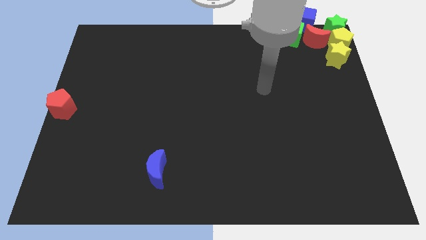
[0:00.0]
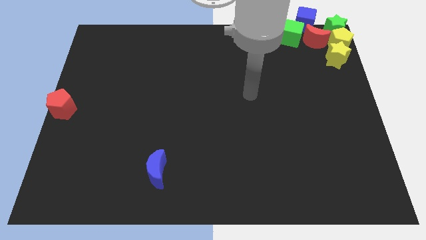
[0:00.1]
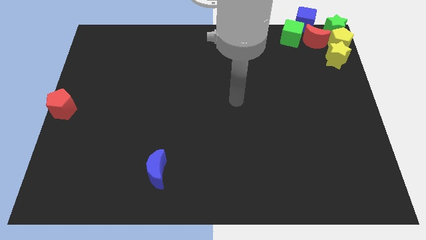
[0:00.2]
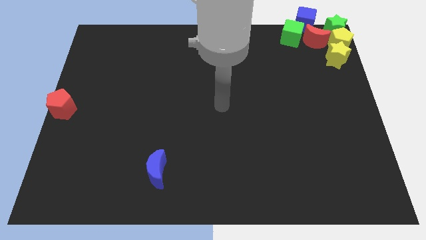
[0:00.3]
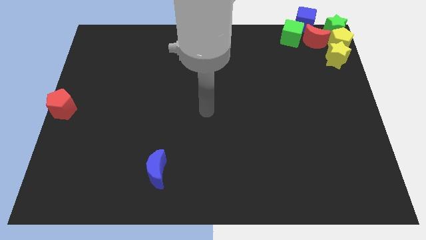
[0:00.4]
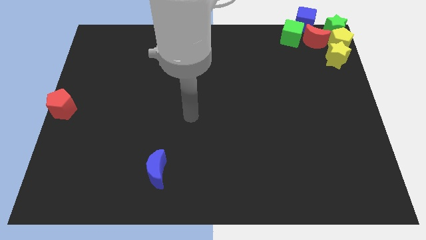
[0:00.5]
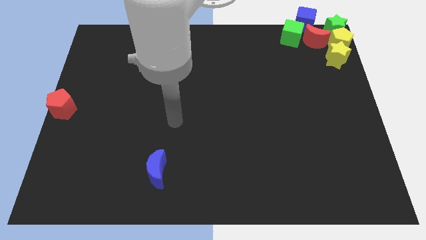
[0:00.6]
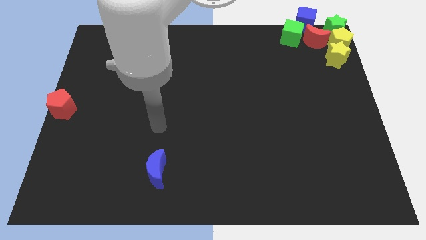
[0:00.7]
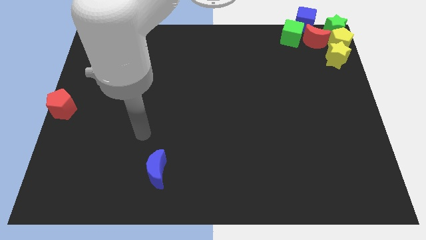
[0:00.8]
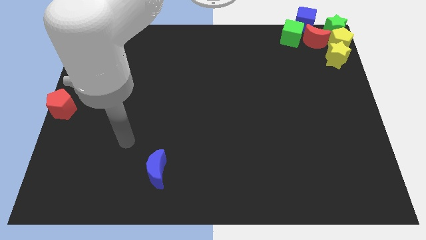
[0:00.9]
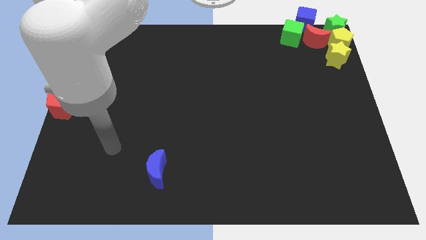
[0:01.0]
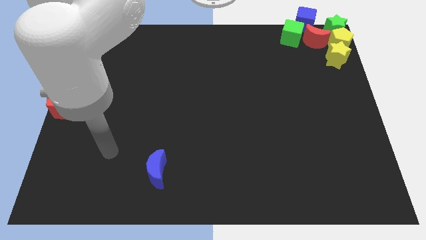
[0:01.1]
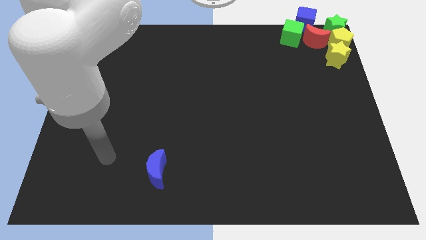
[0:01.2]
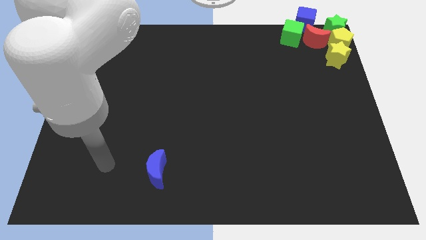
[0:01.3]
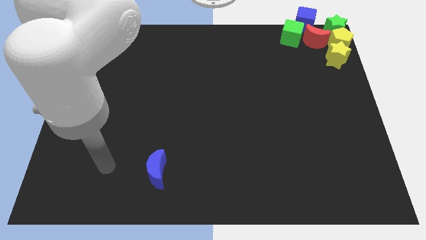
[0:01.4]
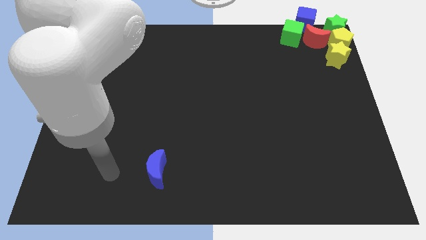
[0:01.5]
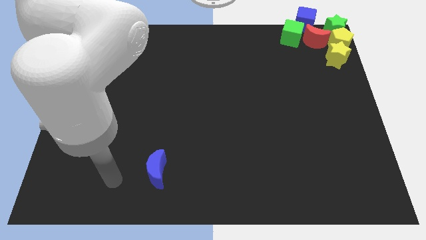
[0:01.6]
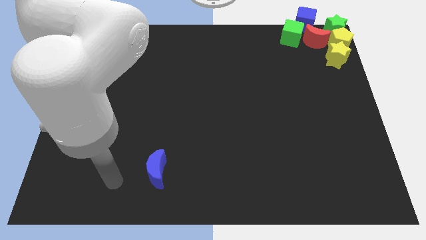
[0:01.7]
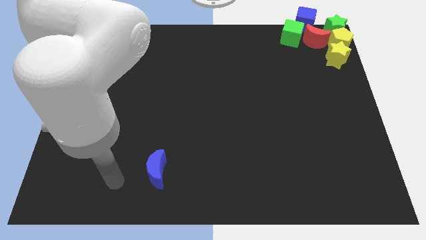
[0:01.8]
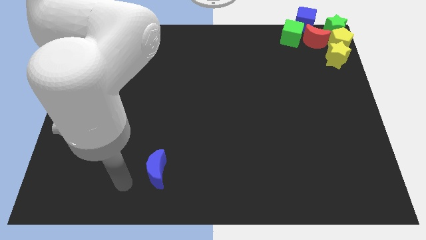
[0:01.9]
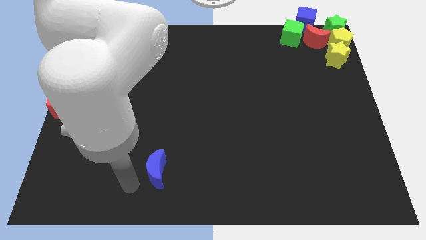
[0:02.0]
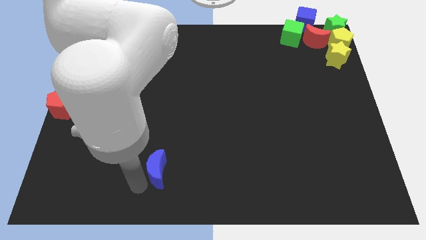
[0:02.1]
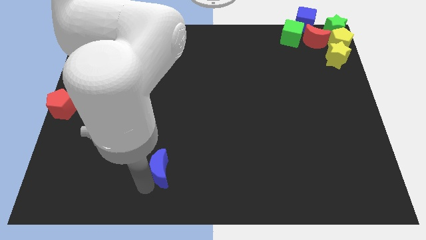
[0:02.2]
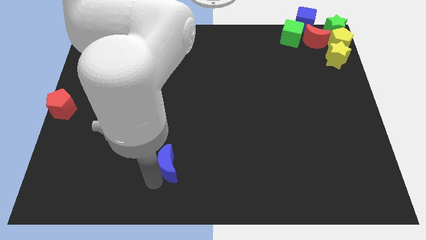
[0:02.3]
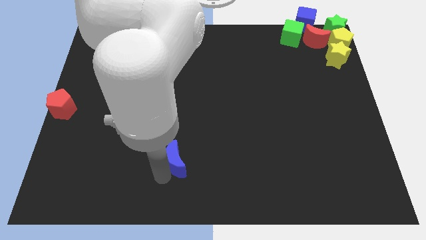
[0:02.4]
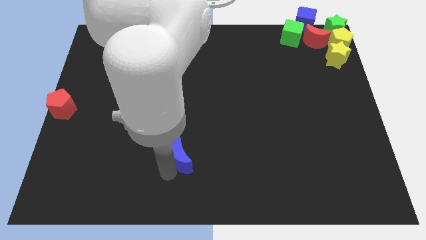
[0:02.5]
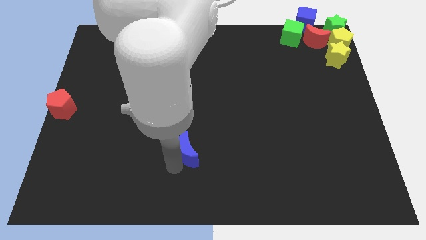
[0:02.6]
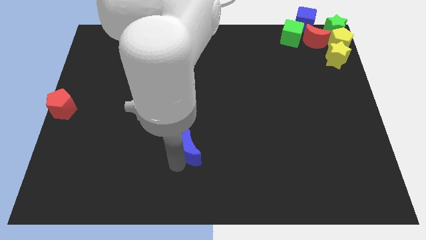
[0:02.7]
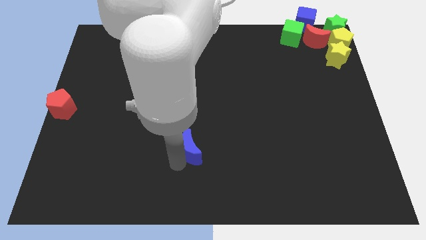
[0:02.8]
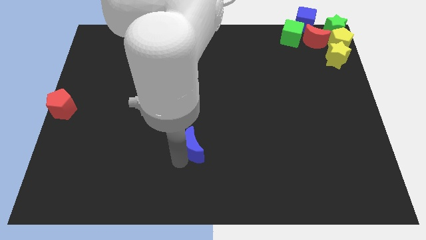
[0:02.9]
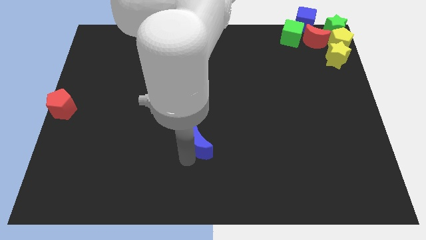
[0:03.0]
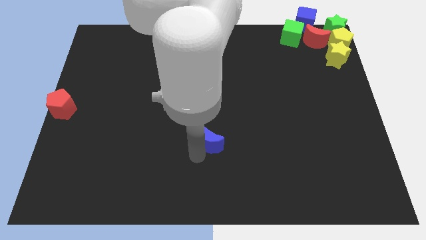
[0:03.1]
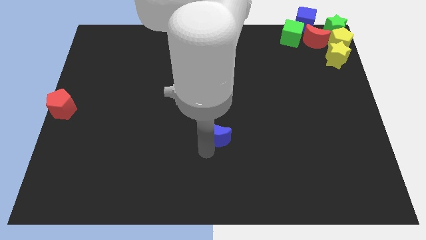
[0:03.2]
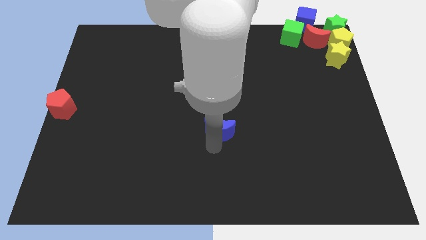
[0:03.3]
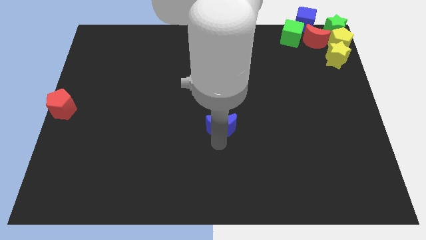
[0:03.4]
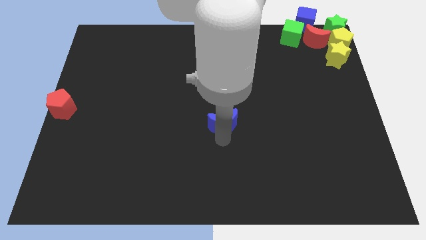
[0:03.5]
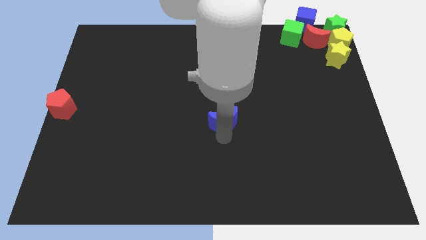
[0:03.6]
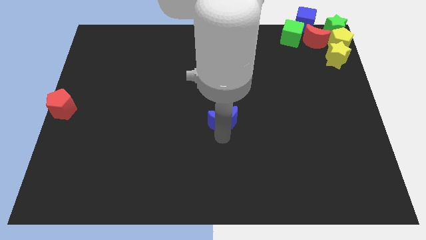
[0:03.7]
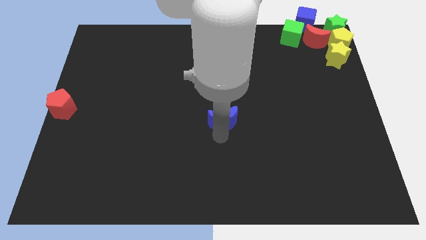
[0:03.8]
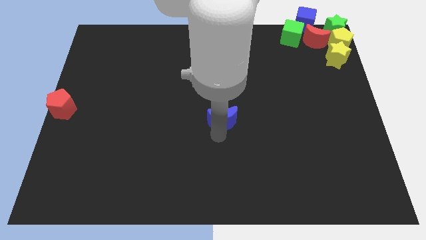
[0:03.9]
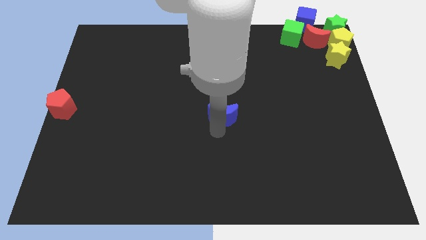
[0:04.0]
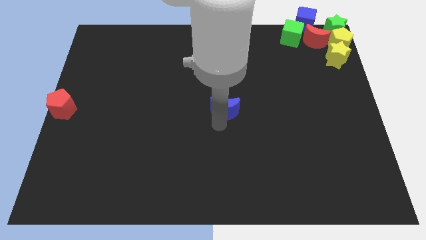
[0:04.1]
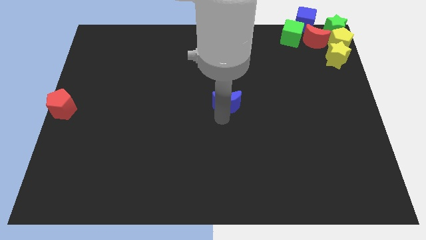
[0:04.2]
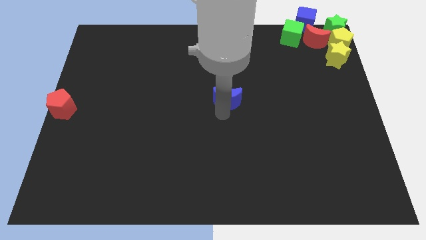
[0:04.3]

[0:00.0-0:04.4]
move the blue moon to the center of the board

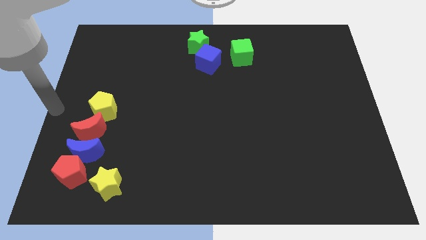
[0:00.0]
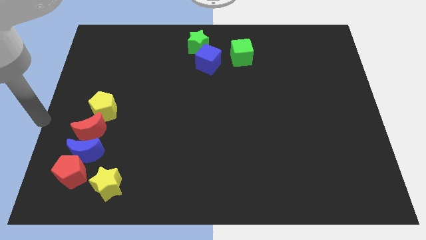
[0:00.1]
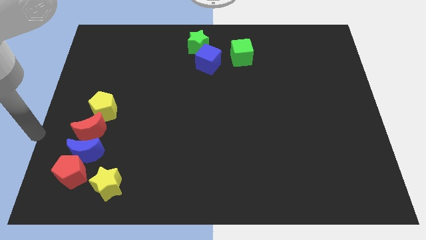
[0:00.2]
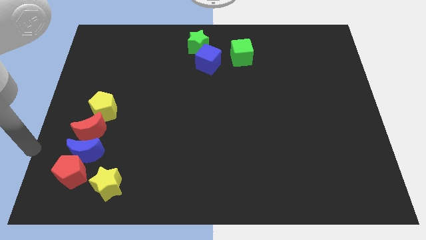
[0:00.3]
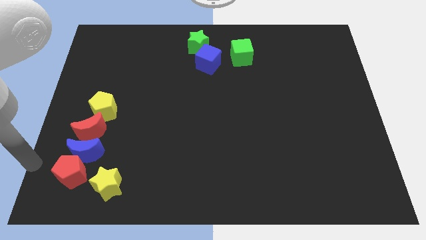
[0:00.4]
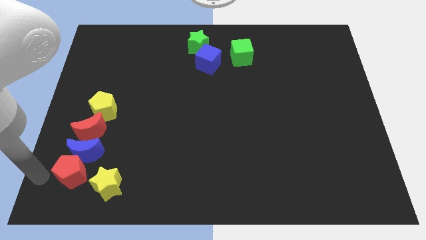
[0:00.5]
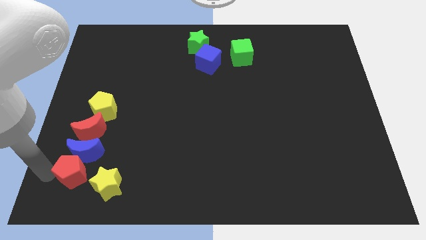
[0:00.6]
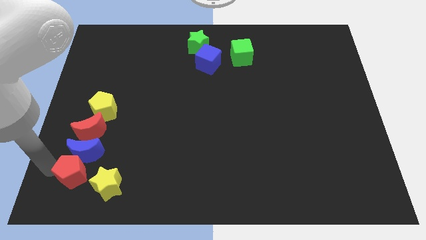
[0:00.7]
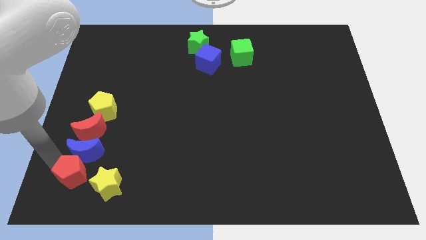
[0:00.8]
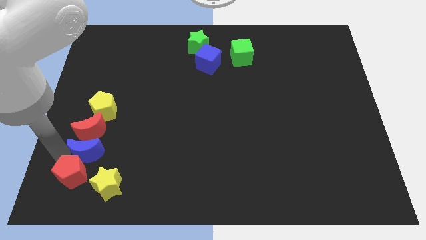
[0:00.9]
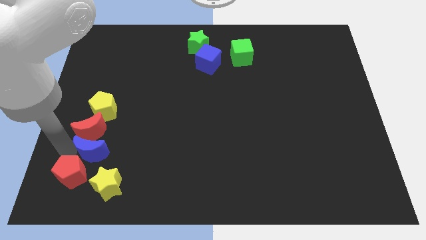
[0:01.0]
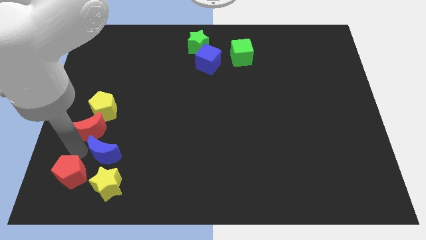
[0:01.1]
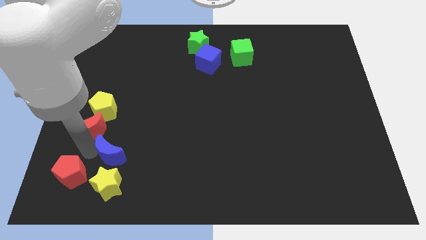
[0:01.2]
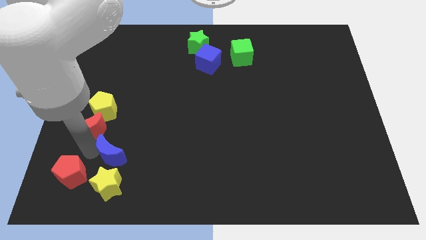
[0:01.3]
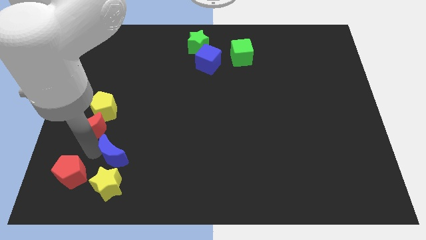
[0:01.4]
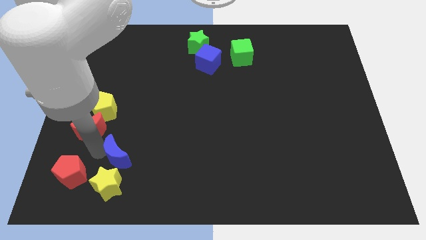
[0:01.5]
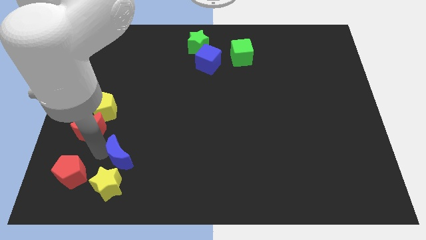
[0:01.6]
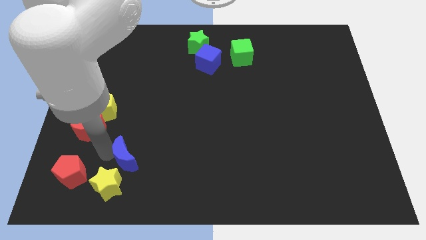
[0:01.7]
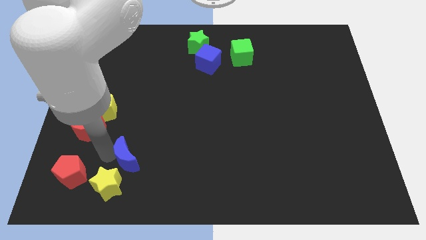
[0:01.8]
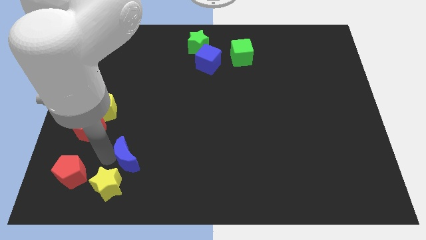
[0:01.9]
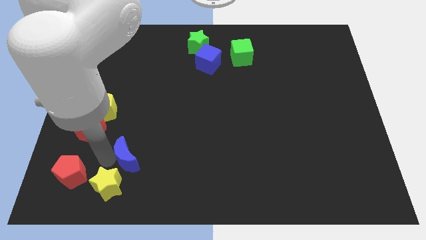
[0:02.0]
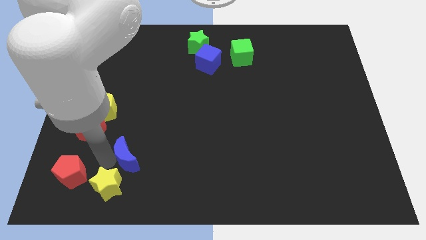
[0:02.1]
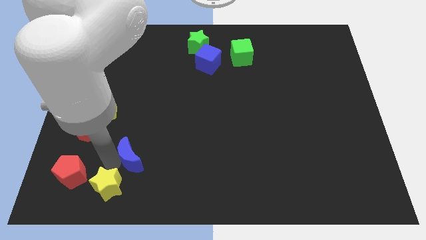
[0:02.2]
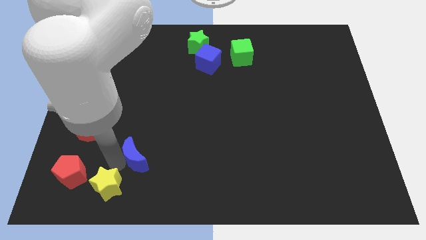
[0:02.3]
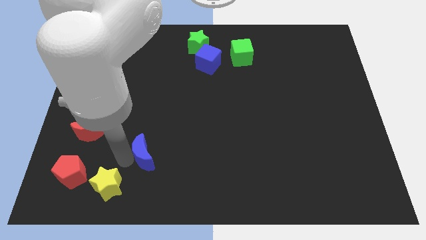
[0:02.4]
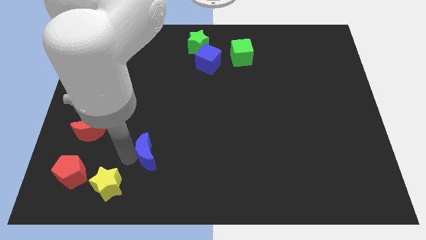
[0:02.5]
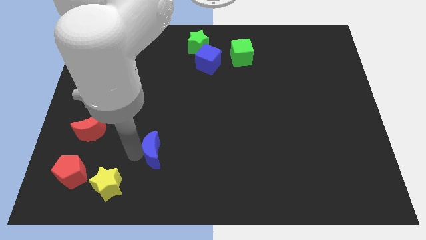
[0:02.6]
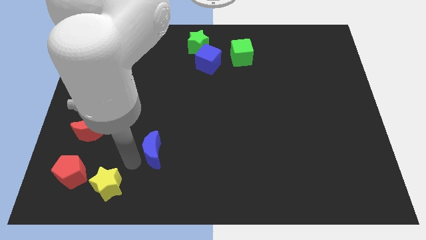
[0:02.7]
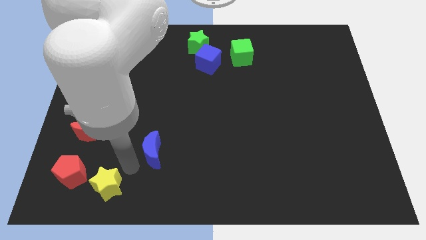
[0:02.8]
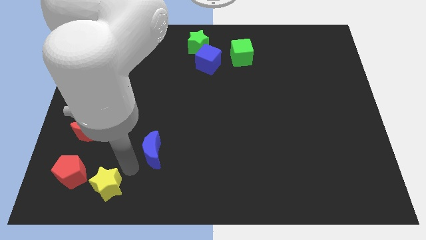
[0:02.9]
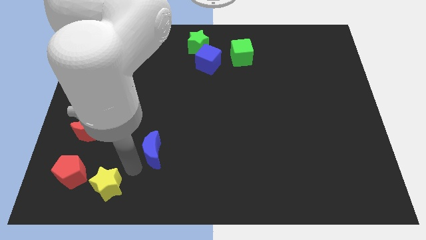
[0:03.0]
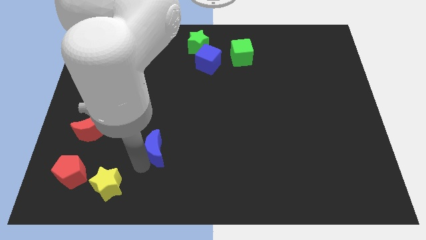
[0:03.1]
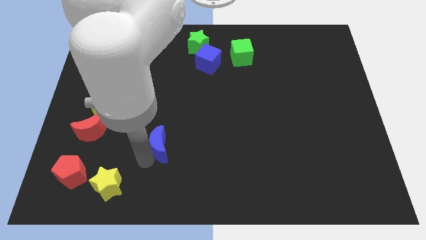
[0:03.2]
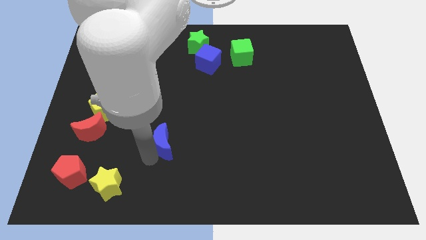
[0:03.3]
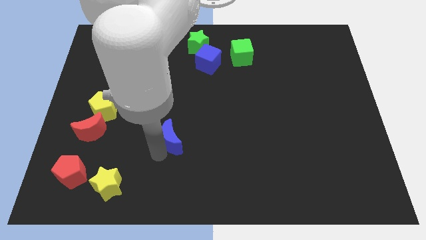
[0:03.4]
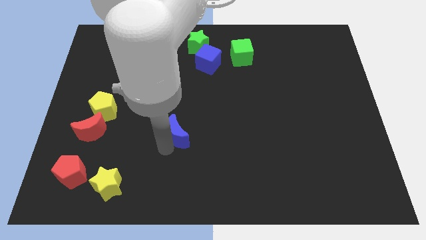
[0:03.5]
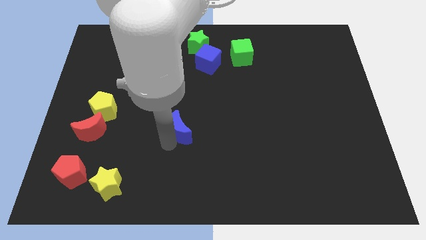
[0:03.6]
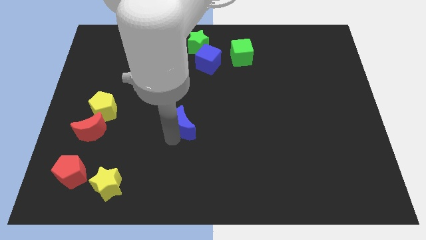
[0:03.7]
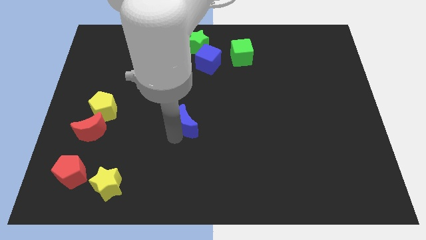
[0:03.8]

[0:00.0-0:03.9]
push the blue moon towards the center of the board

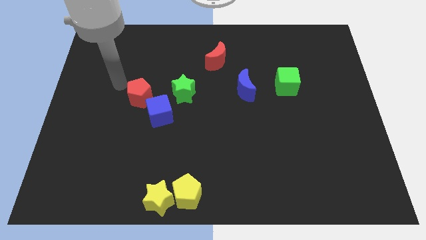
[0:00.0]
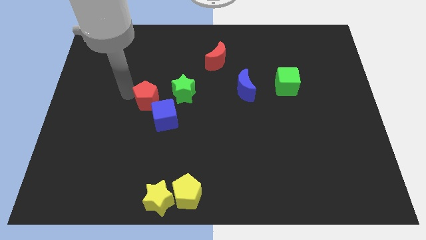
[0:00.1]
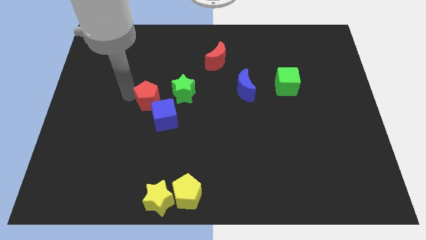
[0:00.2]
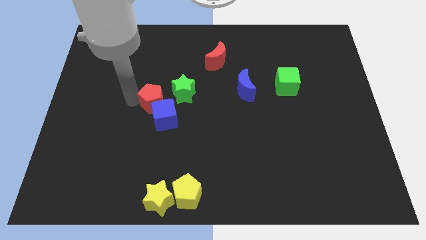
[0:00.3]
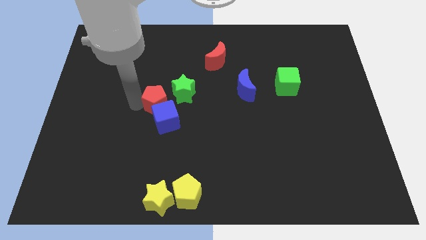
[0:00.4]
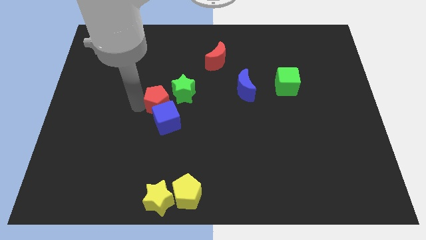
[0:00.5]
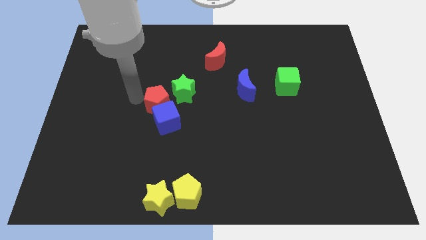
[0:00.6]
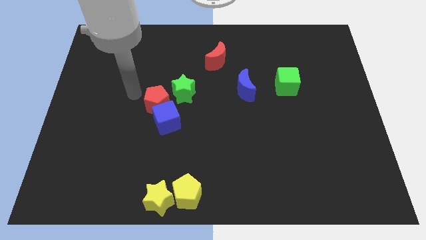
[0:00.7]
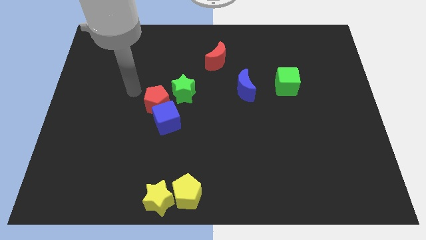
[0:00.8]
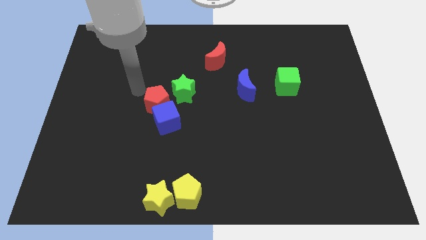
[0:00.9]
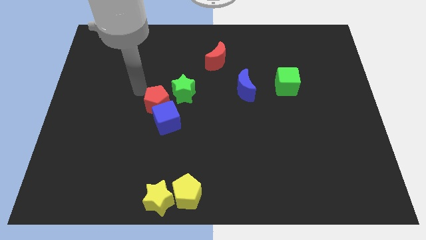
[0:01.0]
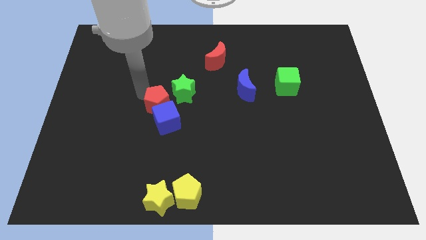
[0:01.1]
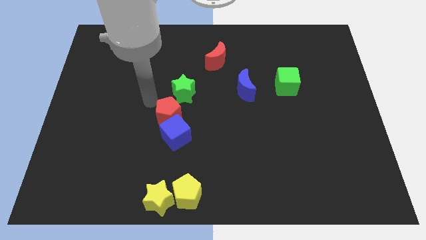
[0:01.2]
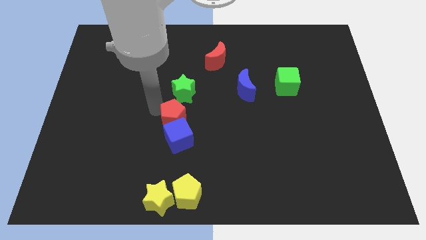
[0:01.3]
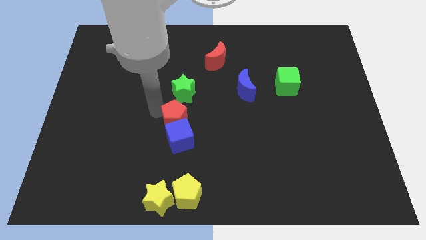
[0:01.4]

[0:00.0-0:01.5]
push the red pentagon along with blue cube towards yellow pentagon
